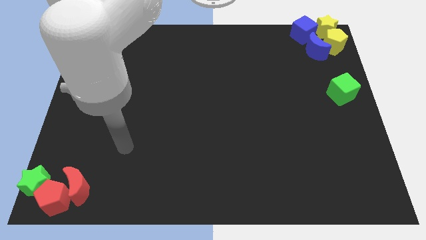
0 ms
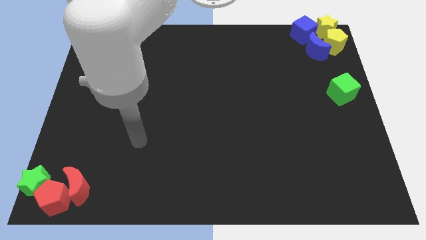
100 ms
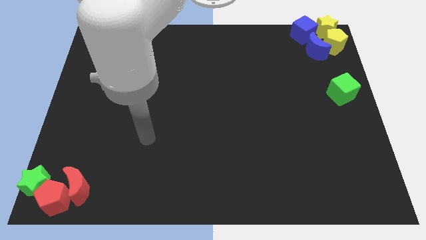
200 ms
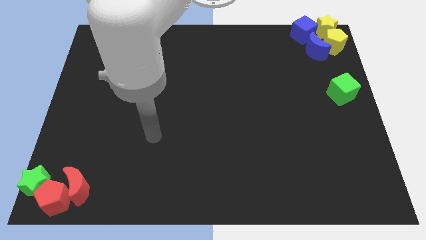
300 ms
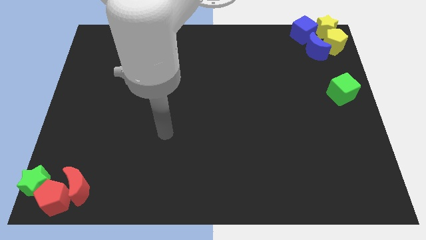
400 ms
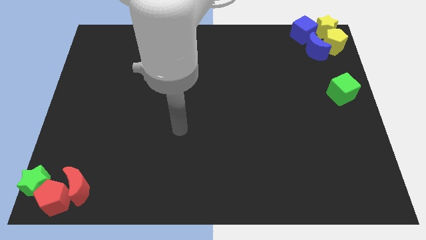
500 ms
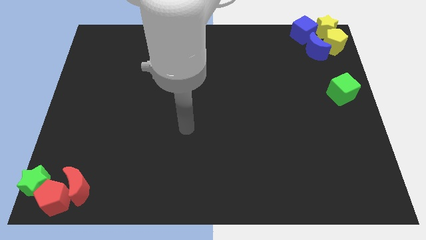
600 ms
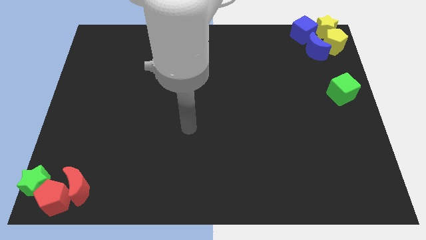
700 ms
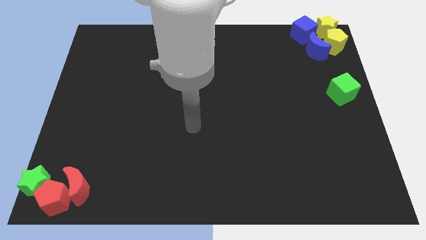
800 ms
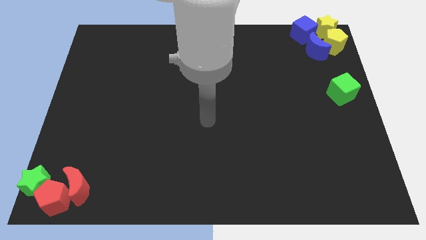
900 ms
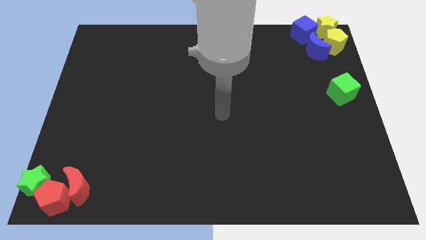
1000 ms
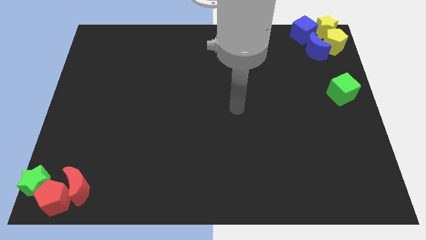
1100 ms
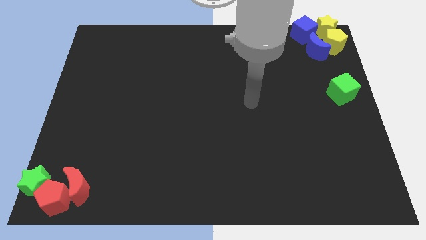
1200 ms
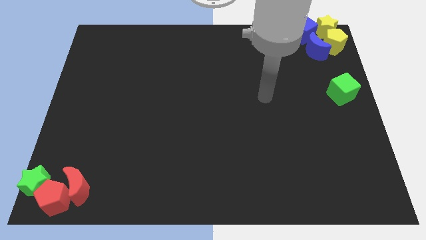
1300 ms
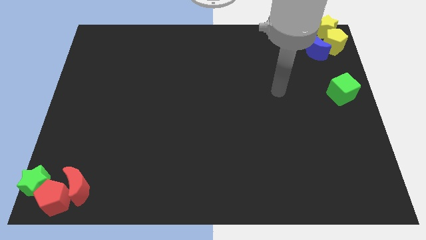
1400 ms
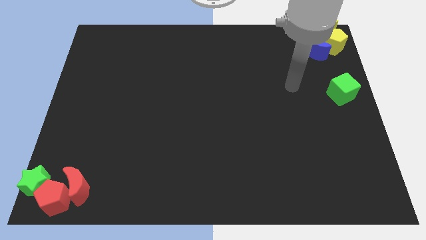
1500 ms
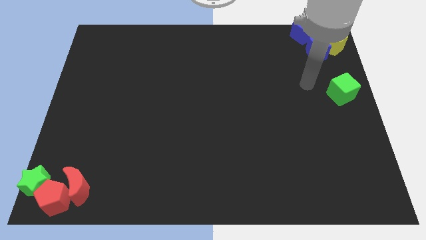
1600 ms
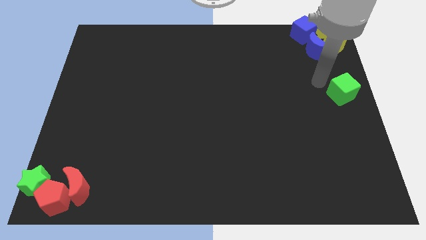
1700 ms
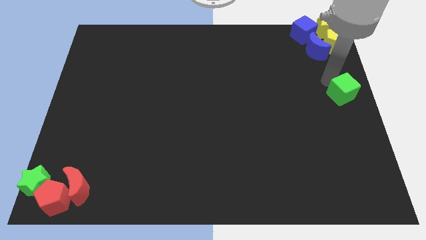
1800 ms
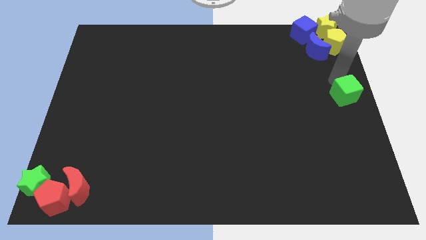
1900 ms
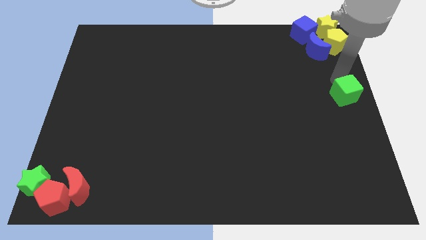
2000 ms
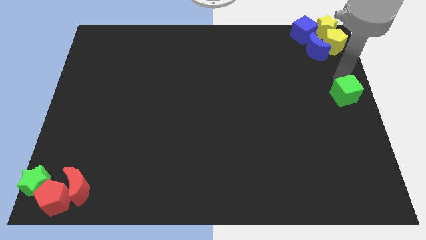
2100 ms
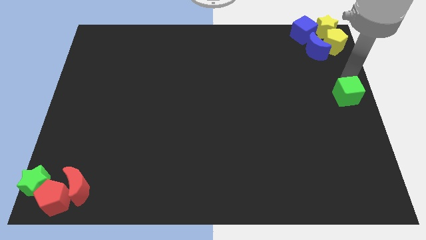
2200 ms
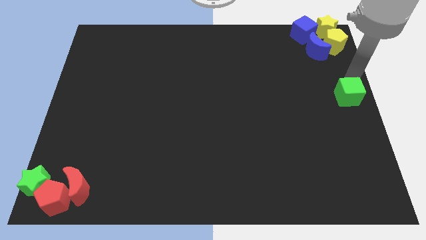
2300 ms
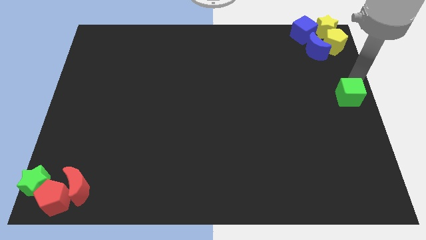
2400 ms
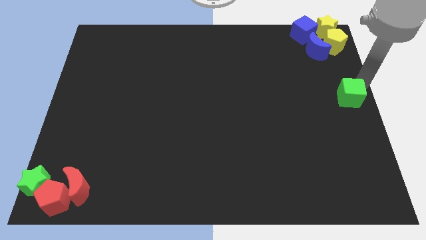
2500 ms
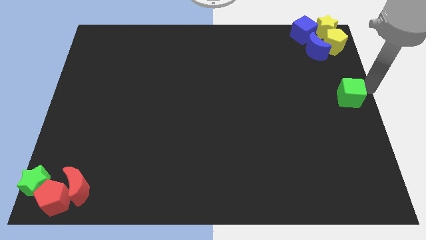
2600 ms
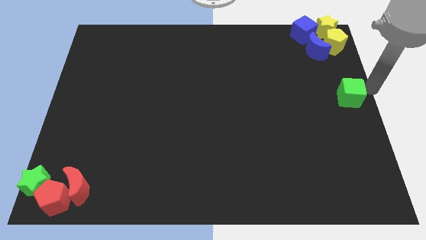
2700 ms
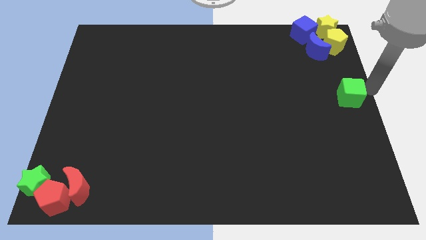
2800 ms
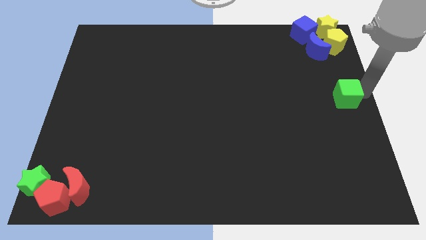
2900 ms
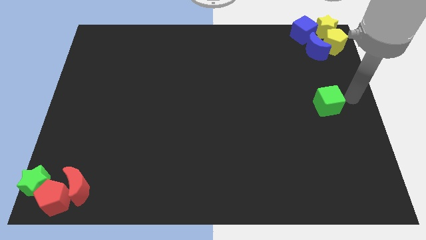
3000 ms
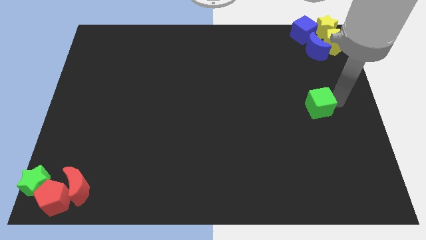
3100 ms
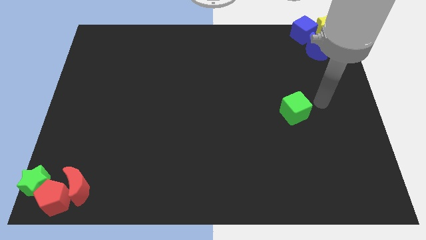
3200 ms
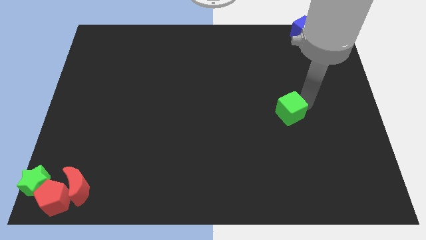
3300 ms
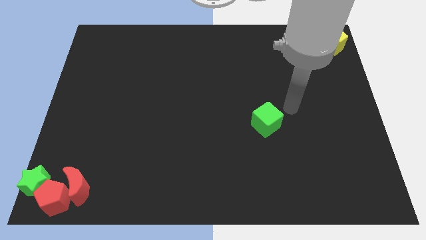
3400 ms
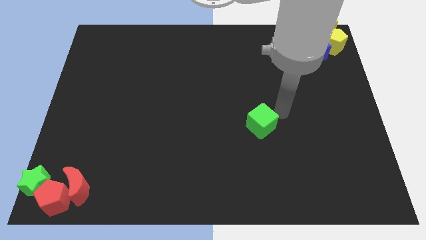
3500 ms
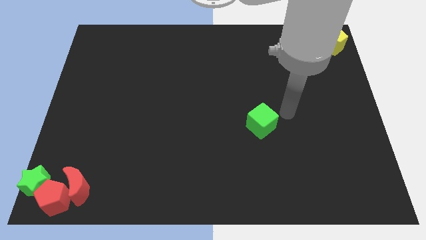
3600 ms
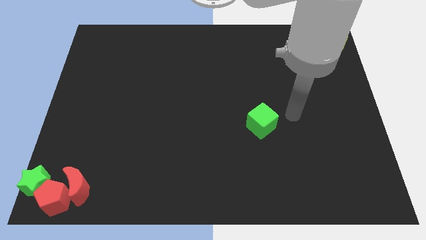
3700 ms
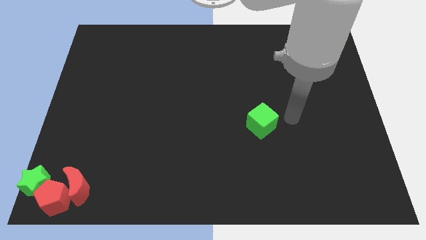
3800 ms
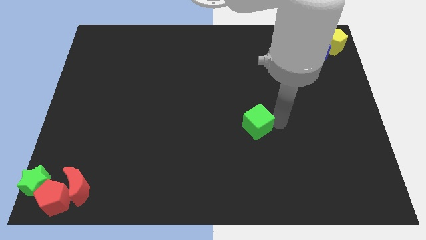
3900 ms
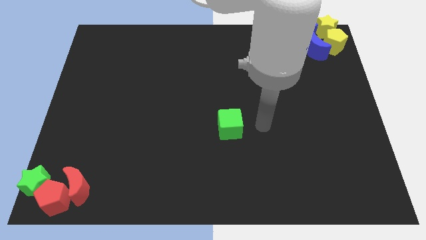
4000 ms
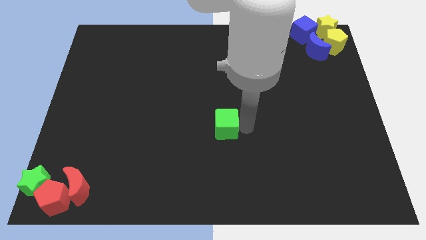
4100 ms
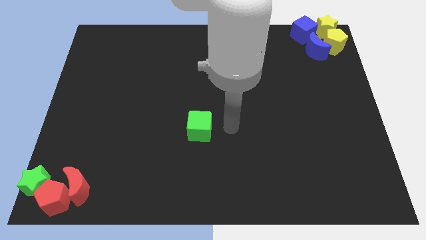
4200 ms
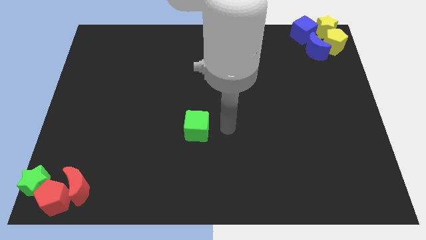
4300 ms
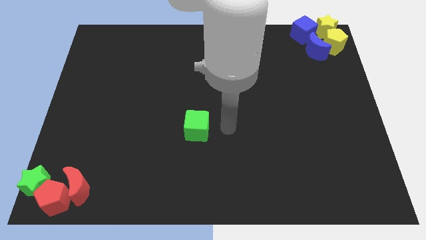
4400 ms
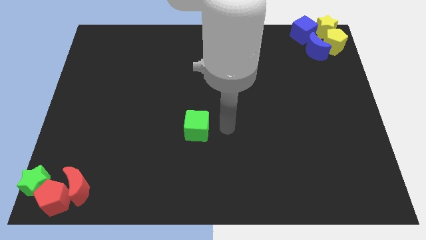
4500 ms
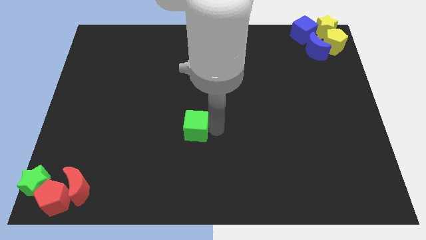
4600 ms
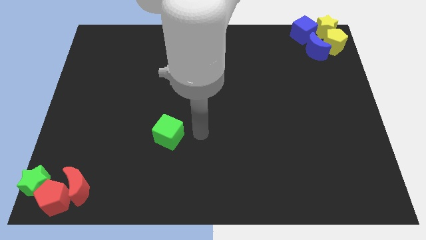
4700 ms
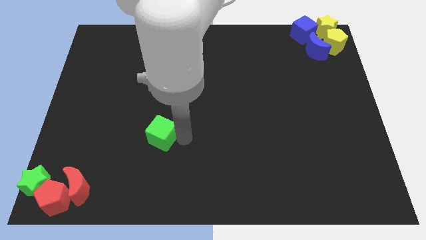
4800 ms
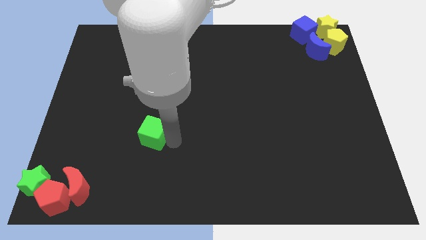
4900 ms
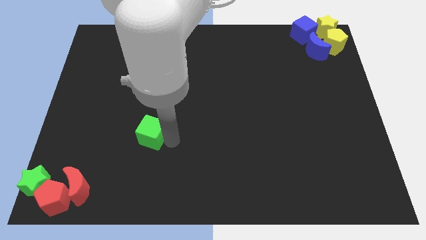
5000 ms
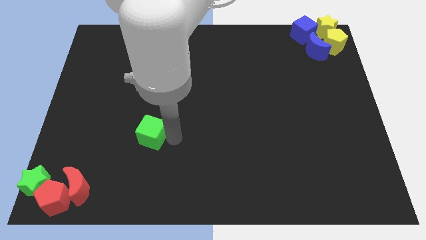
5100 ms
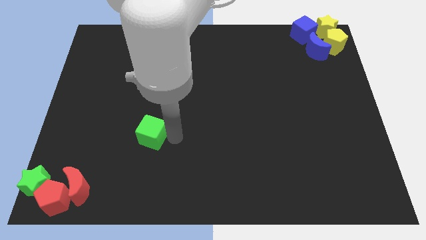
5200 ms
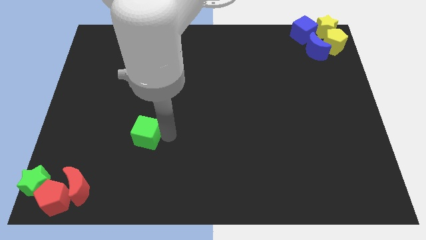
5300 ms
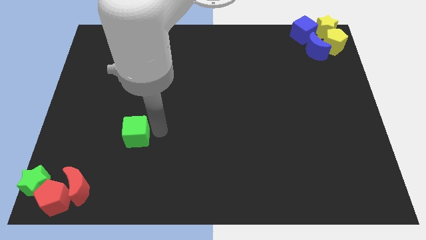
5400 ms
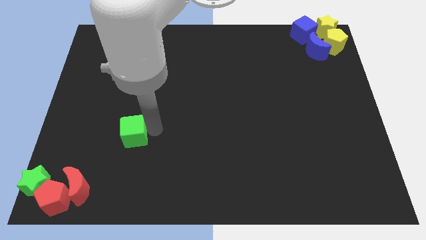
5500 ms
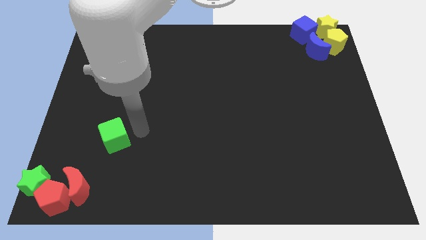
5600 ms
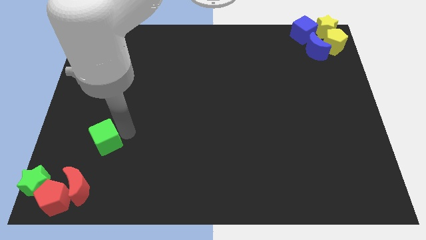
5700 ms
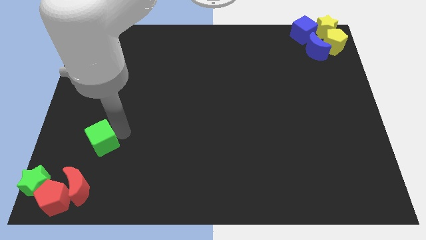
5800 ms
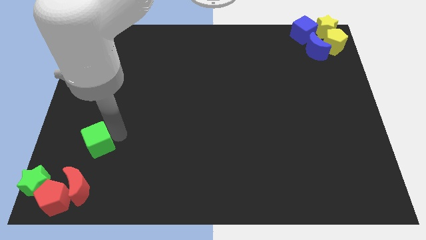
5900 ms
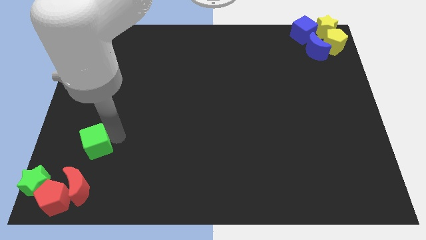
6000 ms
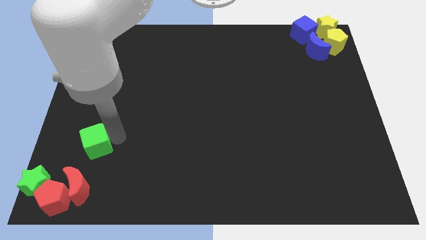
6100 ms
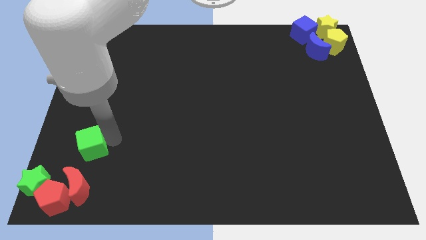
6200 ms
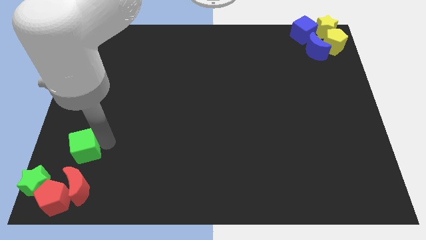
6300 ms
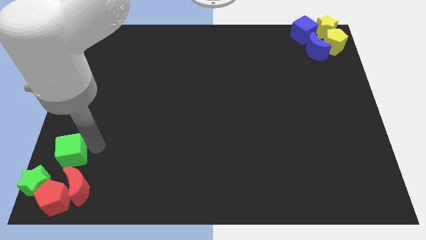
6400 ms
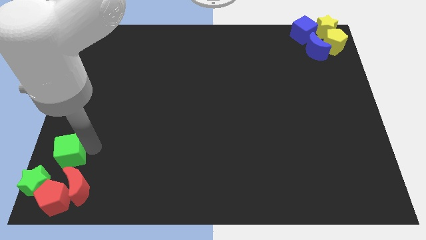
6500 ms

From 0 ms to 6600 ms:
move green cube to the top of the red moon

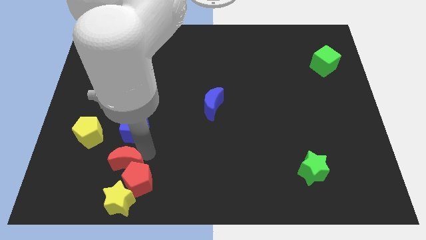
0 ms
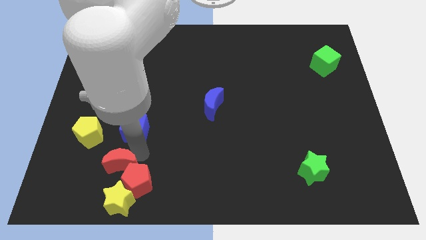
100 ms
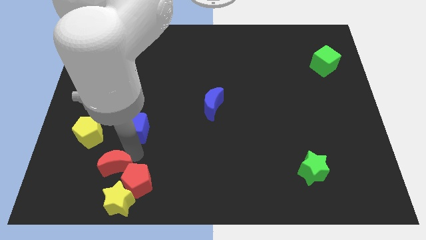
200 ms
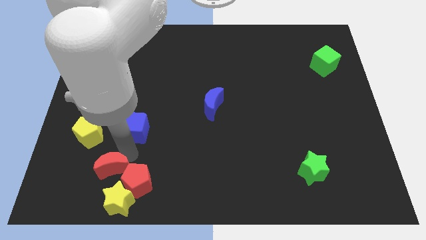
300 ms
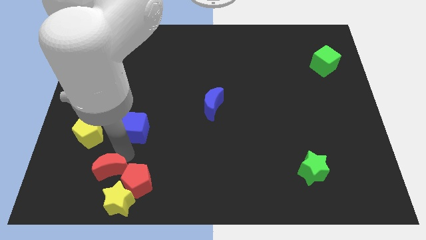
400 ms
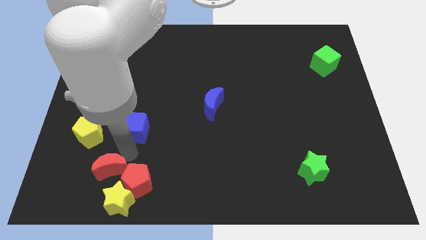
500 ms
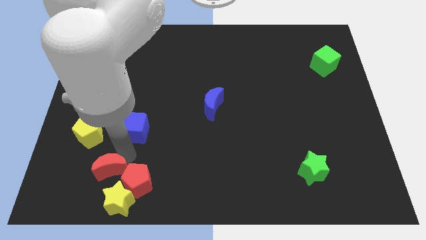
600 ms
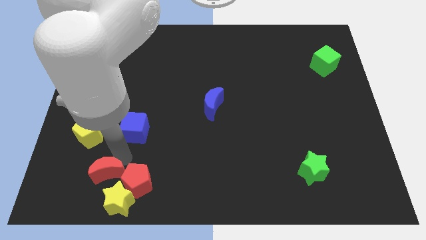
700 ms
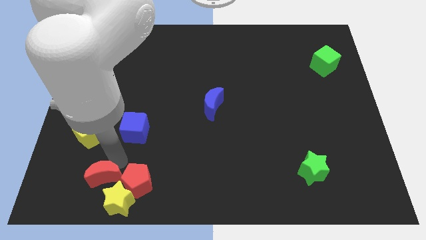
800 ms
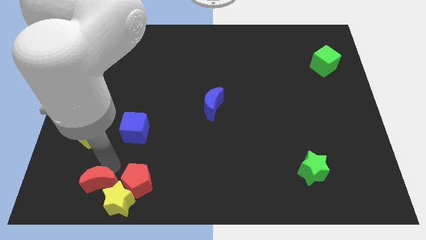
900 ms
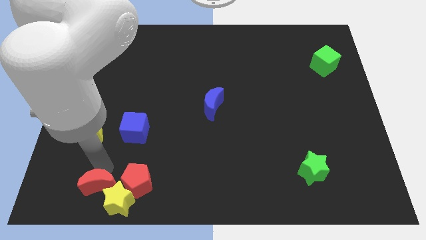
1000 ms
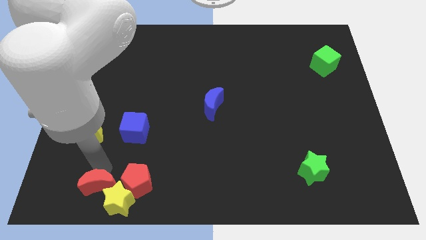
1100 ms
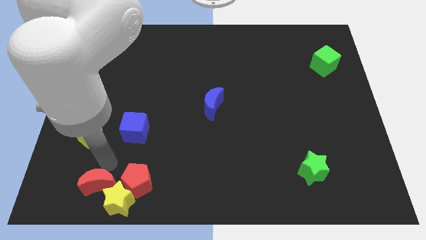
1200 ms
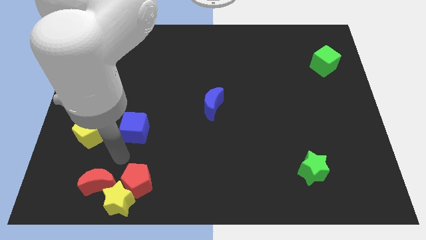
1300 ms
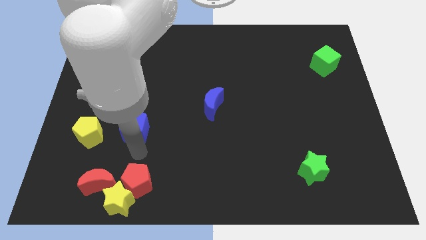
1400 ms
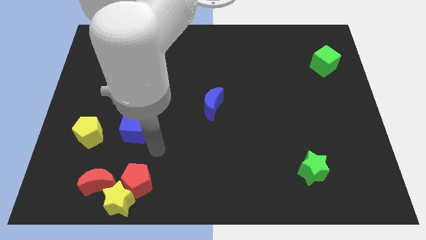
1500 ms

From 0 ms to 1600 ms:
move the red crescent to the top left of the yellow star

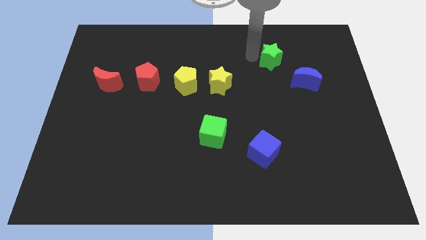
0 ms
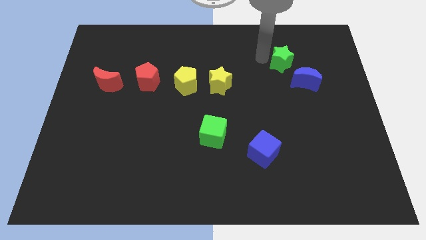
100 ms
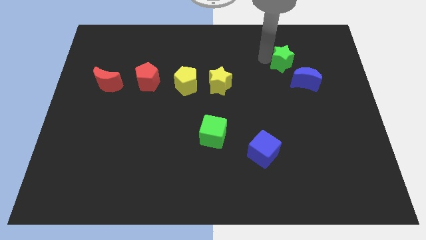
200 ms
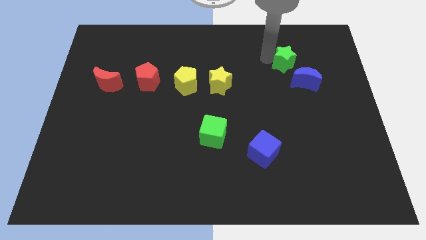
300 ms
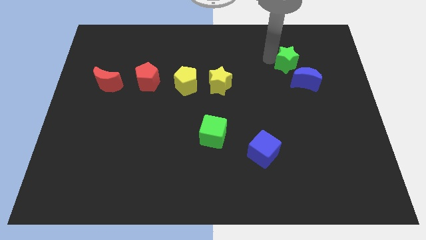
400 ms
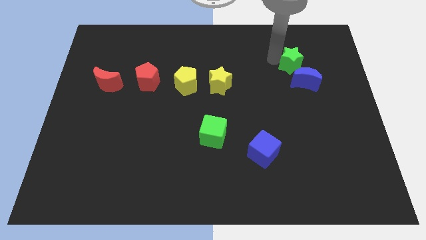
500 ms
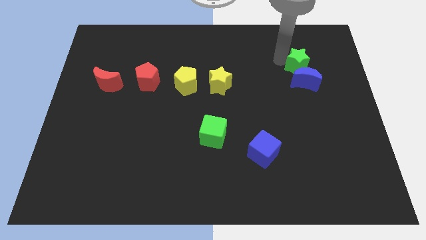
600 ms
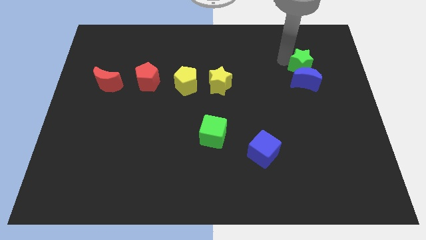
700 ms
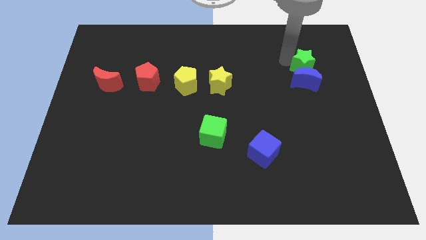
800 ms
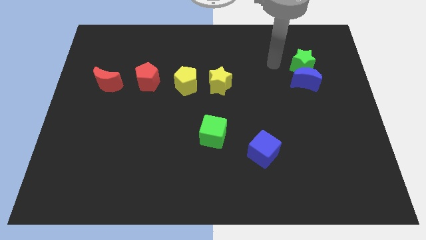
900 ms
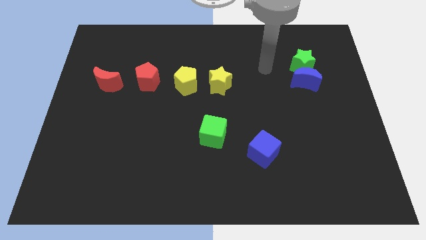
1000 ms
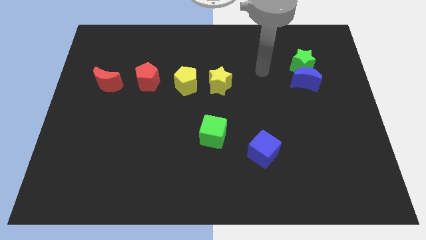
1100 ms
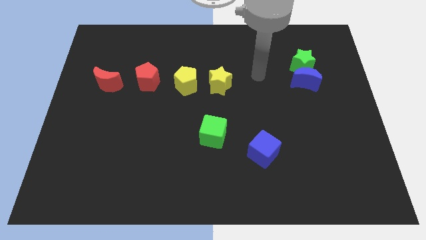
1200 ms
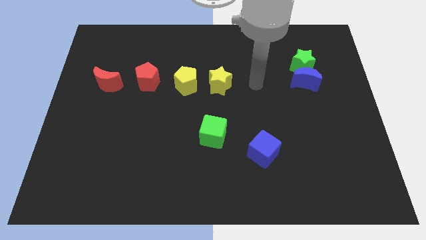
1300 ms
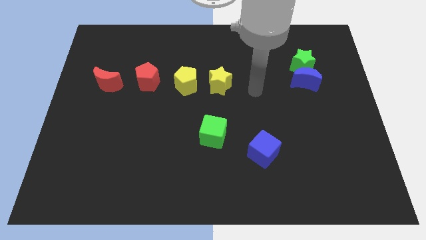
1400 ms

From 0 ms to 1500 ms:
move the green star to the top side of the blue crescent
